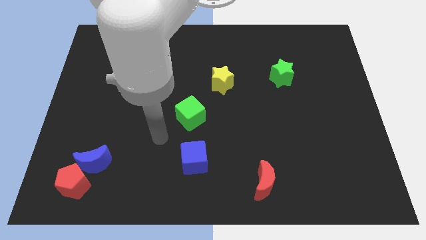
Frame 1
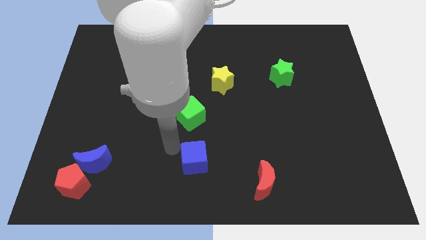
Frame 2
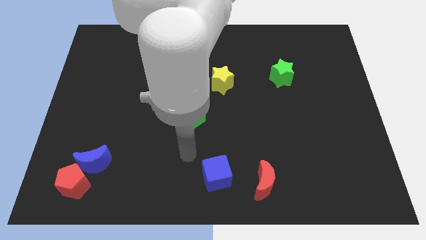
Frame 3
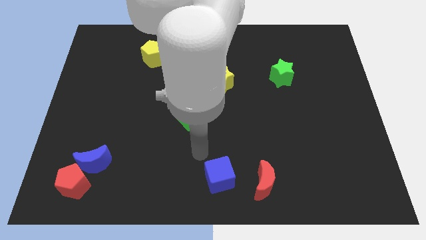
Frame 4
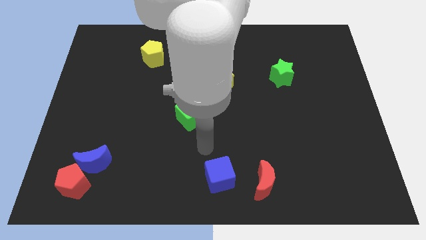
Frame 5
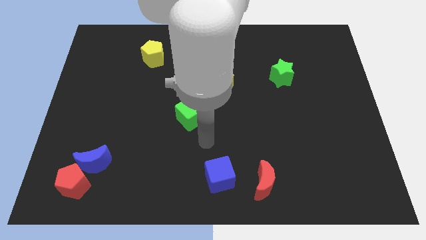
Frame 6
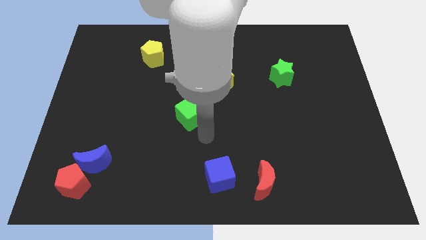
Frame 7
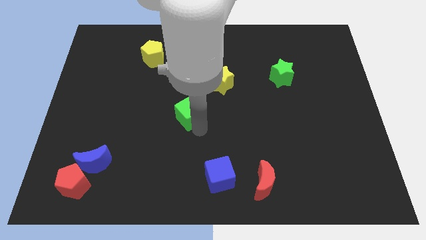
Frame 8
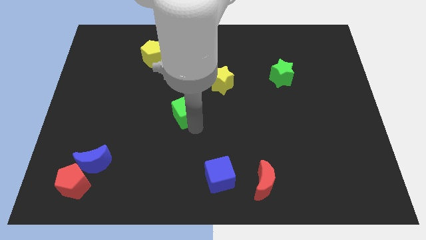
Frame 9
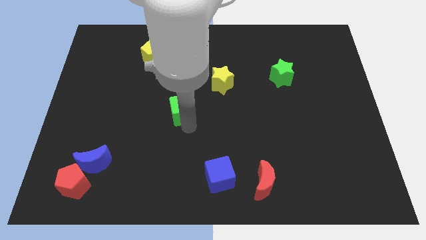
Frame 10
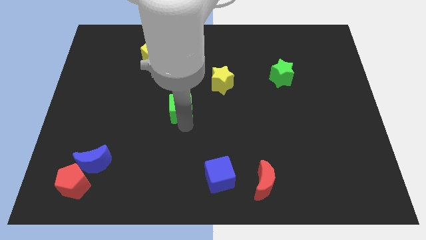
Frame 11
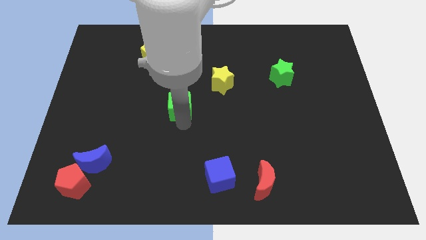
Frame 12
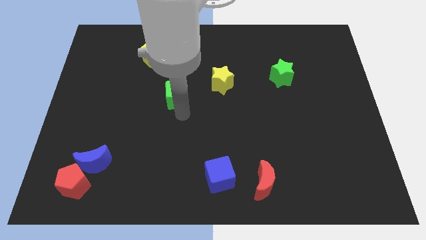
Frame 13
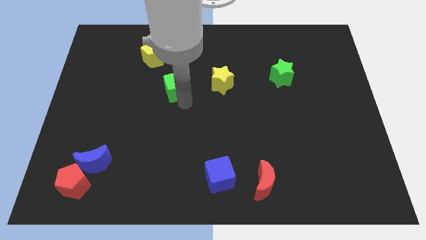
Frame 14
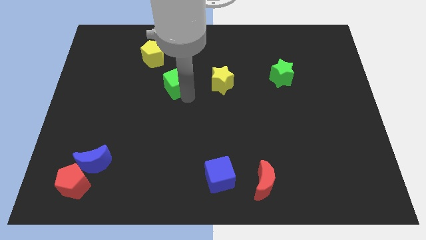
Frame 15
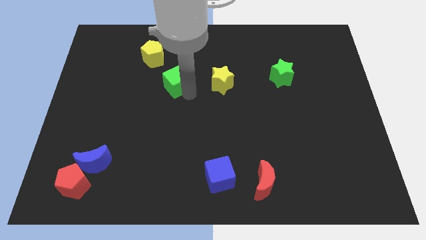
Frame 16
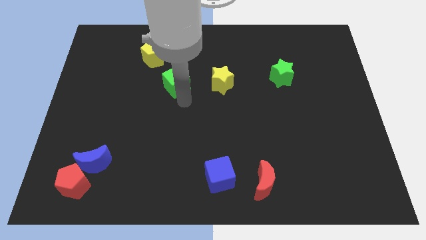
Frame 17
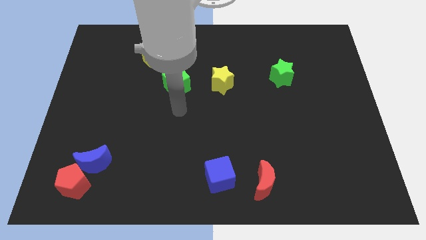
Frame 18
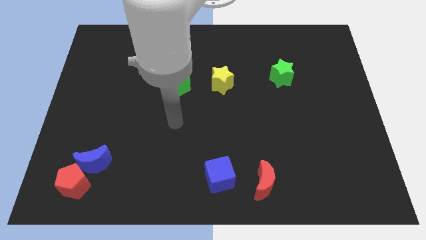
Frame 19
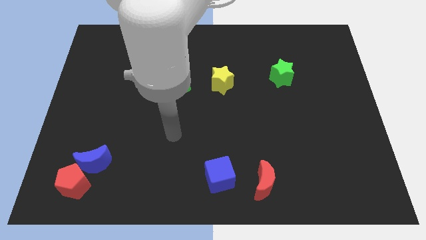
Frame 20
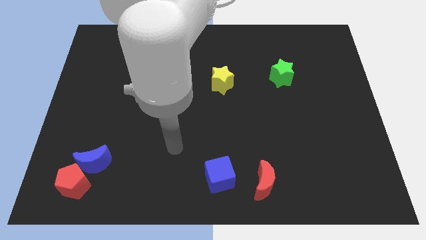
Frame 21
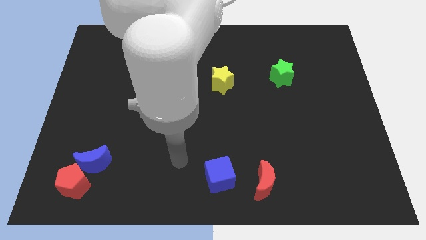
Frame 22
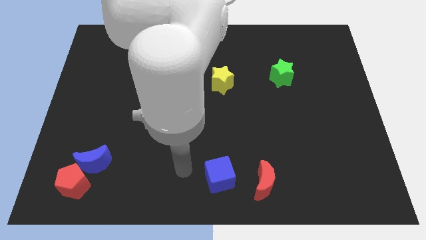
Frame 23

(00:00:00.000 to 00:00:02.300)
move the blue cube to the left side of the red moon

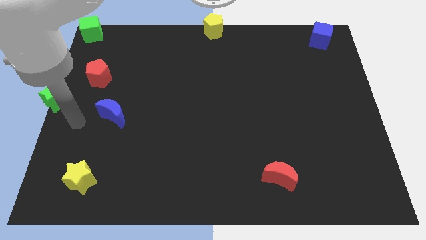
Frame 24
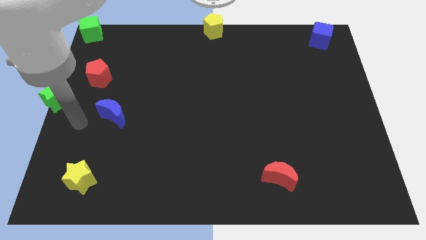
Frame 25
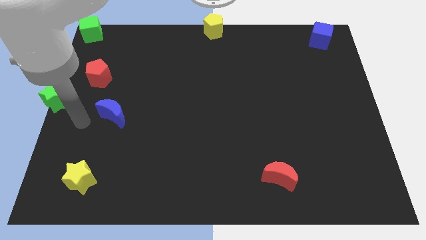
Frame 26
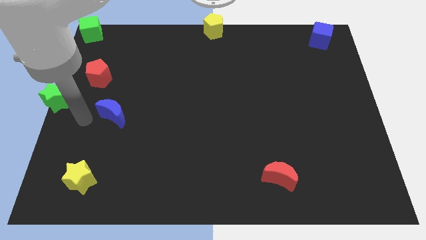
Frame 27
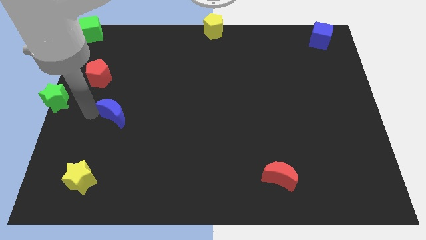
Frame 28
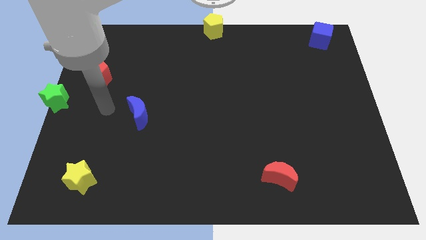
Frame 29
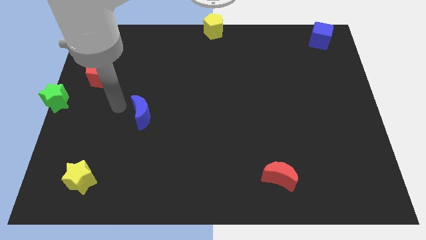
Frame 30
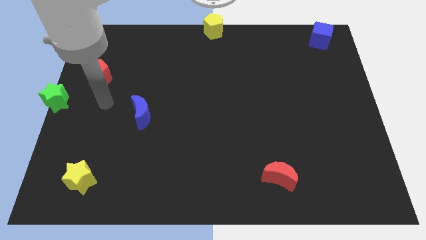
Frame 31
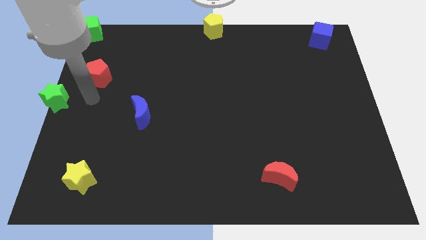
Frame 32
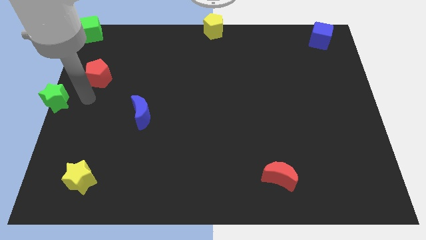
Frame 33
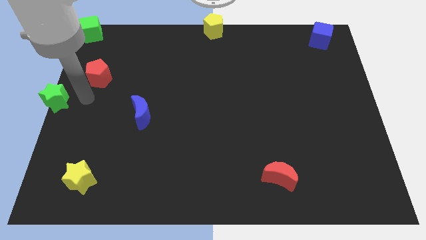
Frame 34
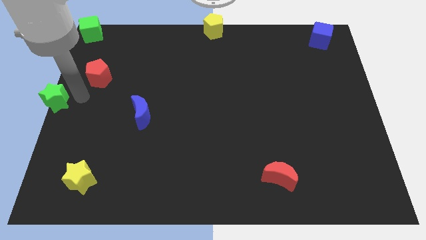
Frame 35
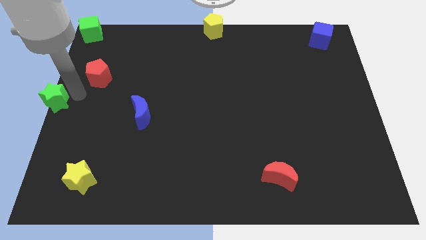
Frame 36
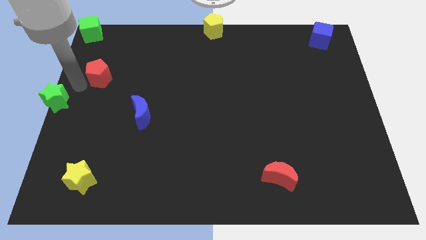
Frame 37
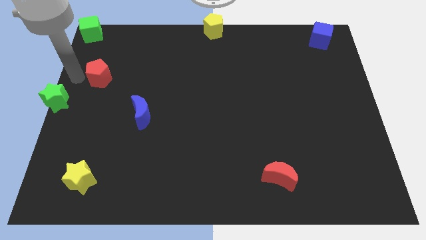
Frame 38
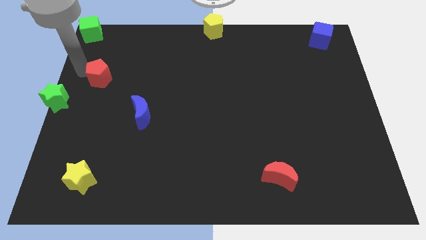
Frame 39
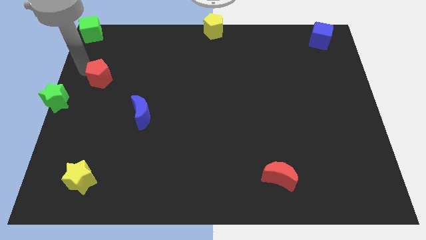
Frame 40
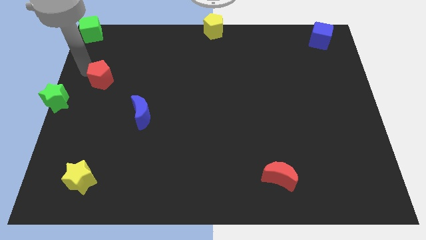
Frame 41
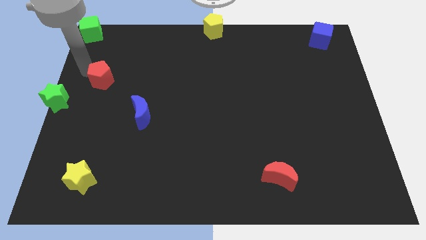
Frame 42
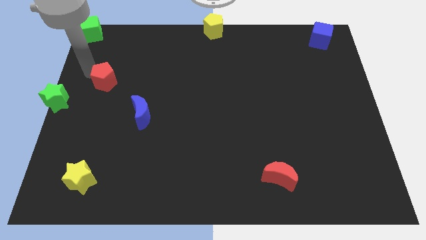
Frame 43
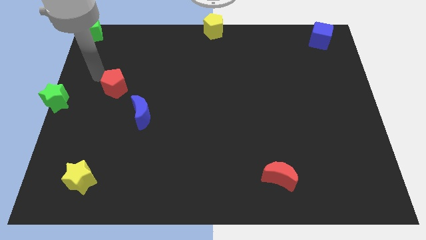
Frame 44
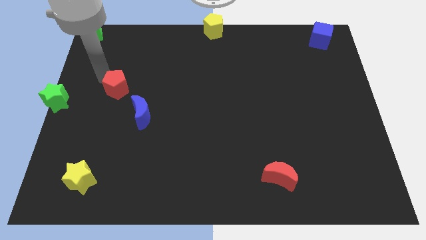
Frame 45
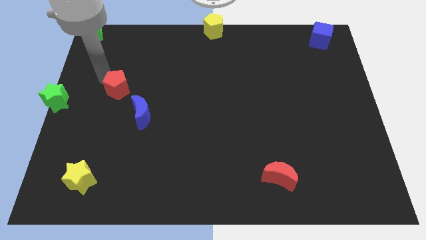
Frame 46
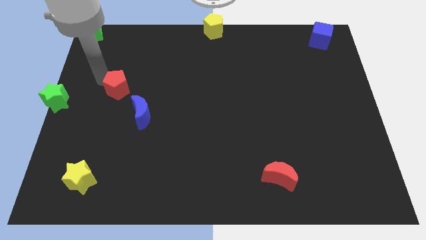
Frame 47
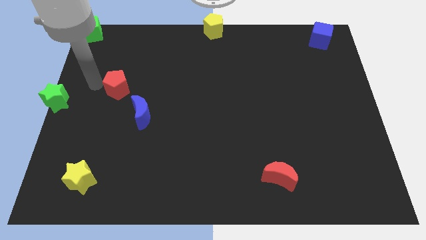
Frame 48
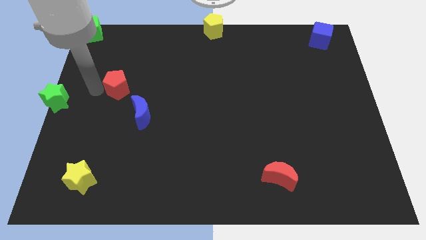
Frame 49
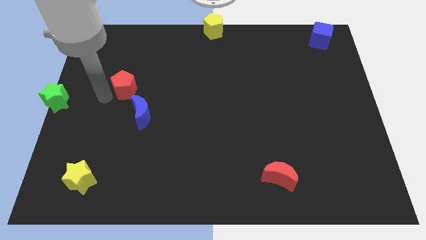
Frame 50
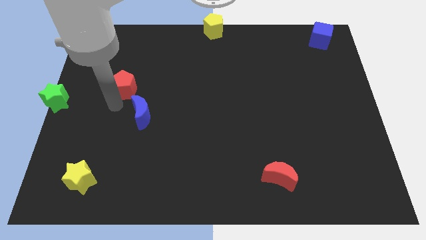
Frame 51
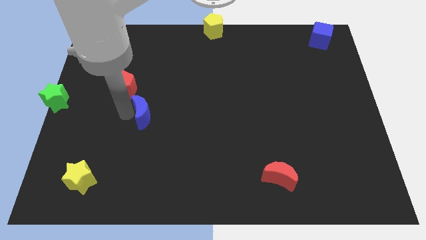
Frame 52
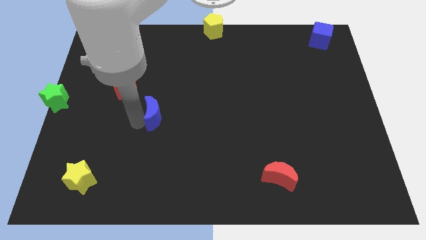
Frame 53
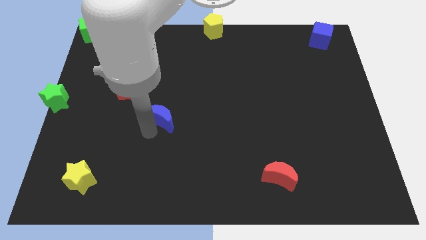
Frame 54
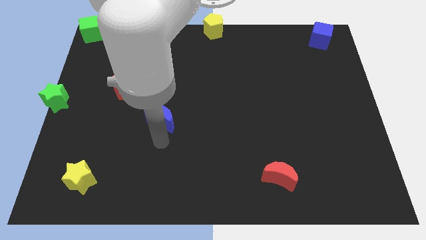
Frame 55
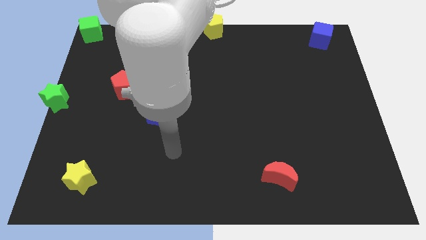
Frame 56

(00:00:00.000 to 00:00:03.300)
move the blue moon towards the center of board

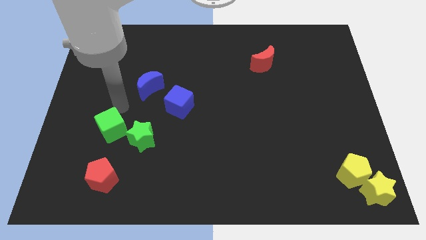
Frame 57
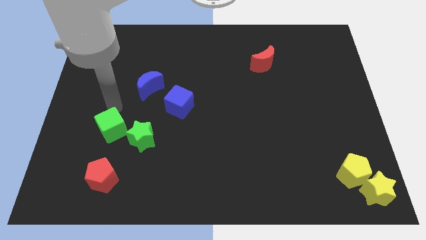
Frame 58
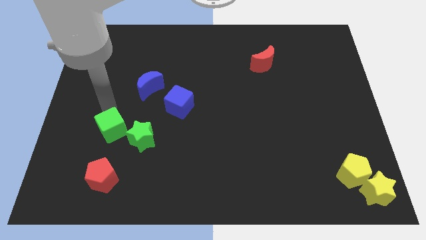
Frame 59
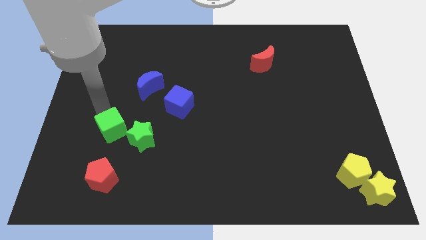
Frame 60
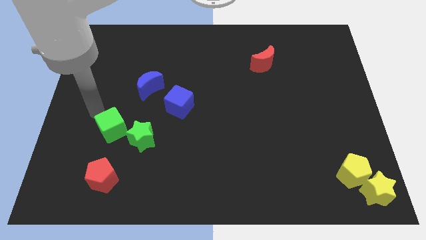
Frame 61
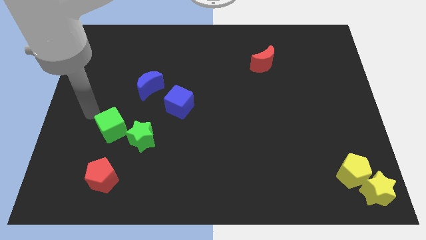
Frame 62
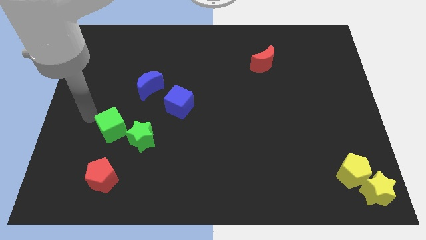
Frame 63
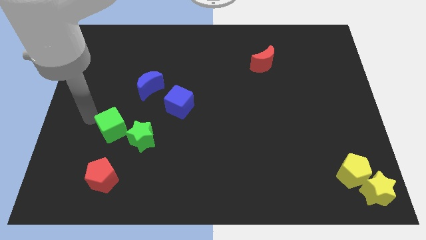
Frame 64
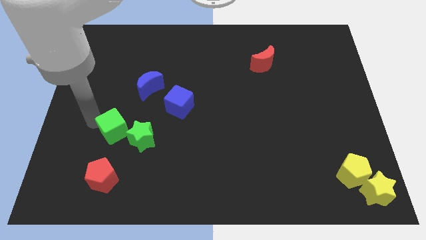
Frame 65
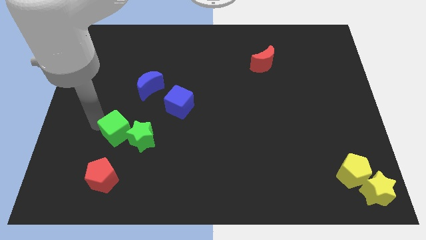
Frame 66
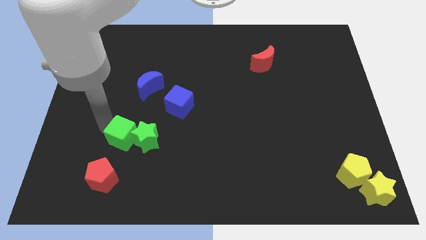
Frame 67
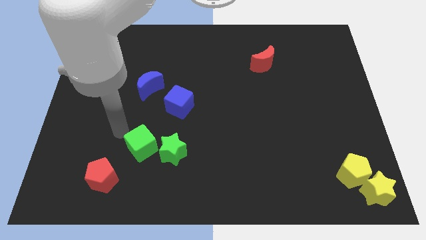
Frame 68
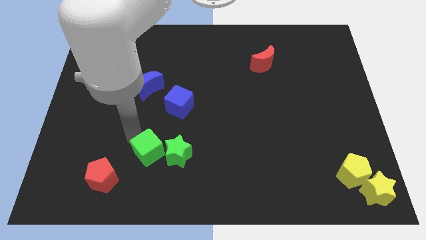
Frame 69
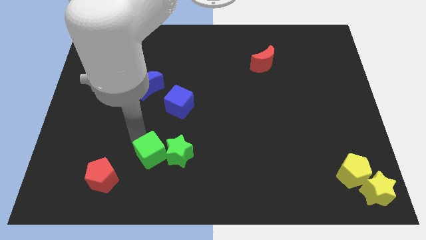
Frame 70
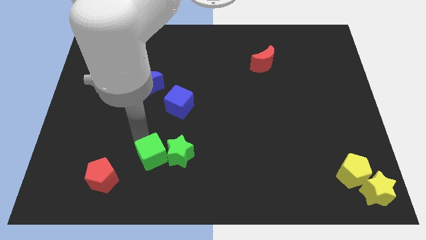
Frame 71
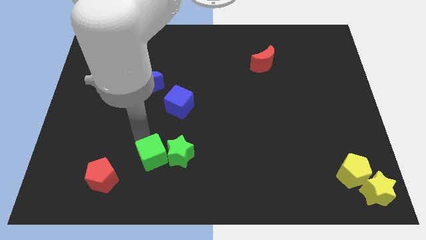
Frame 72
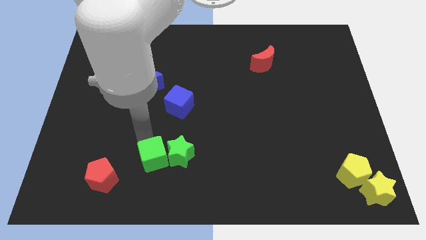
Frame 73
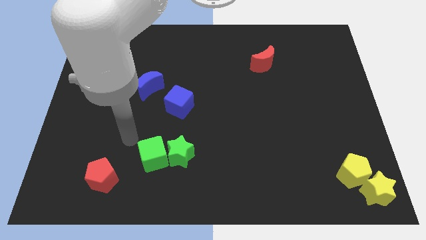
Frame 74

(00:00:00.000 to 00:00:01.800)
push green cube to the right

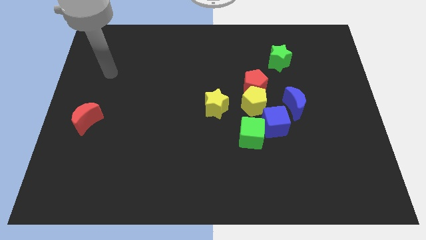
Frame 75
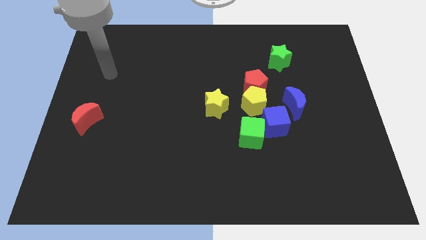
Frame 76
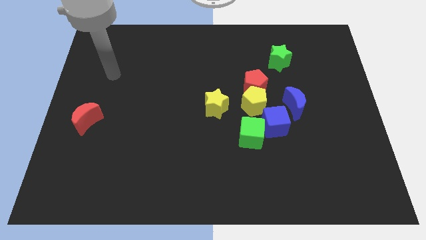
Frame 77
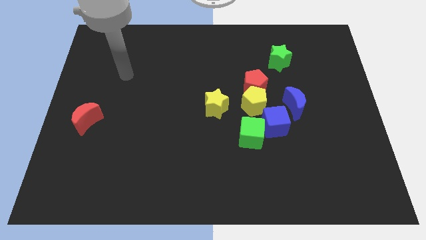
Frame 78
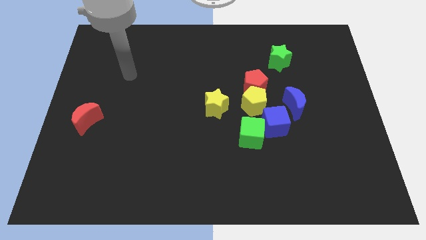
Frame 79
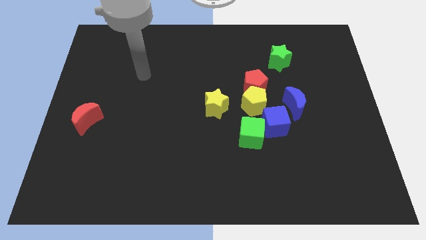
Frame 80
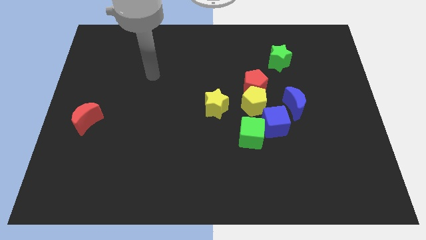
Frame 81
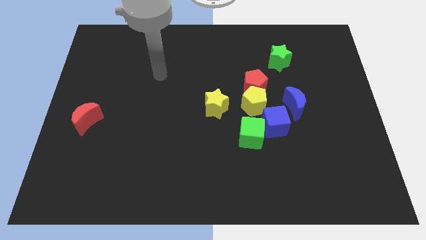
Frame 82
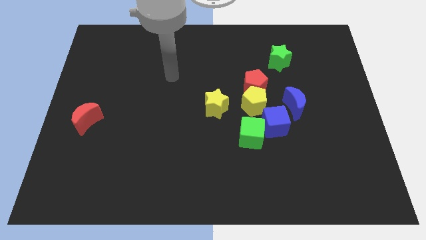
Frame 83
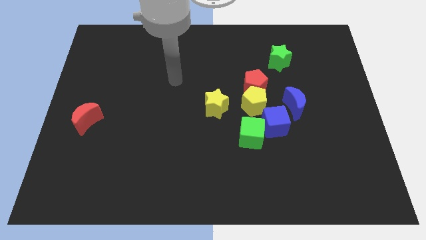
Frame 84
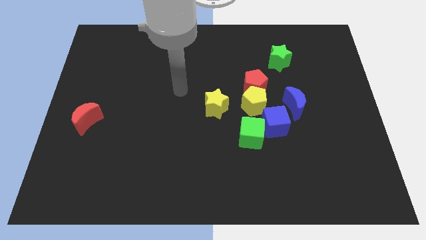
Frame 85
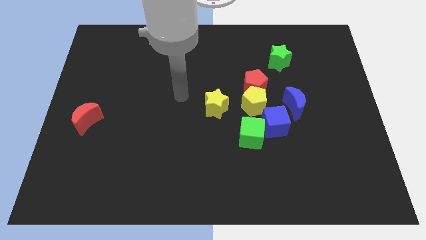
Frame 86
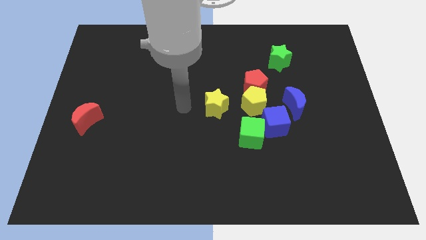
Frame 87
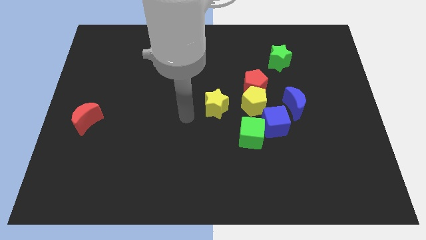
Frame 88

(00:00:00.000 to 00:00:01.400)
place your arm parallel to yellow star
